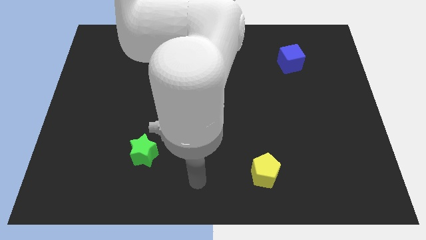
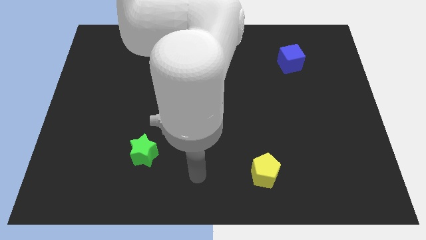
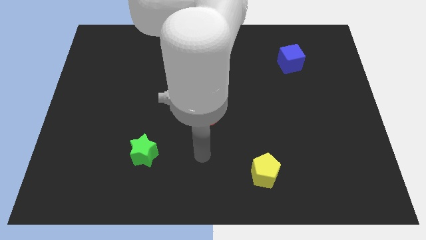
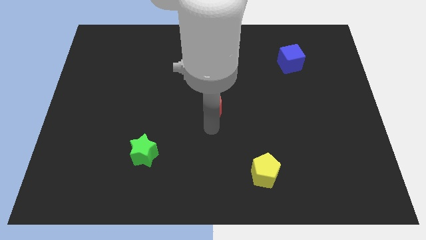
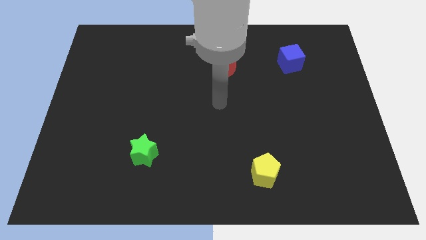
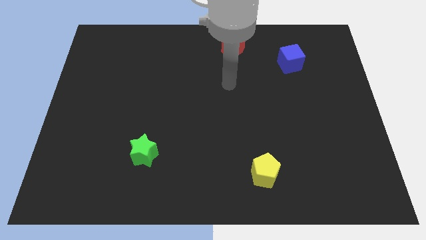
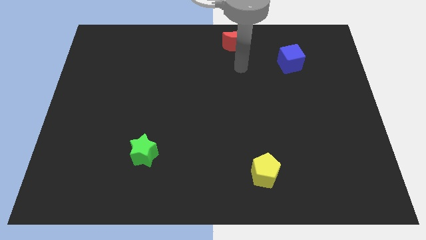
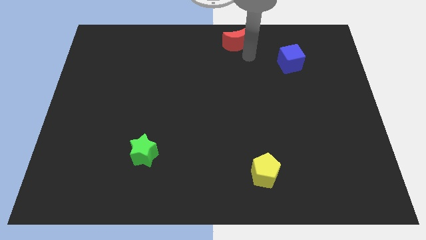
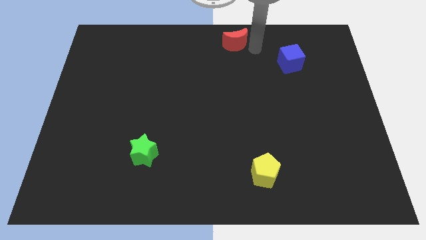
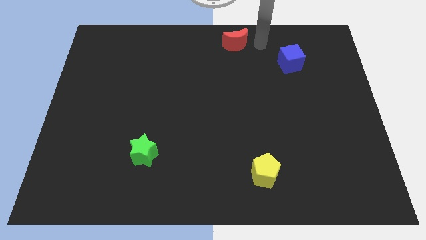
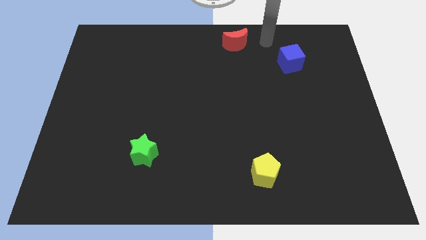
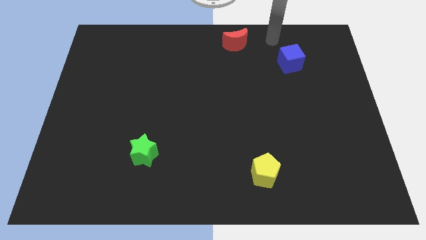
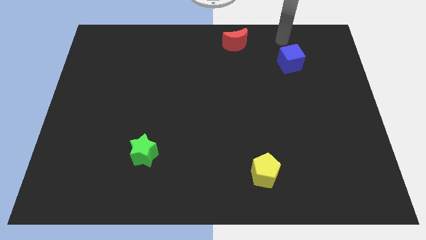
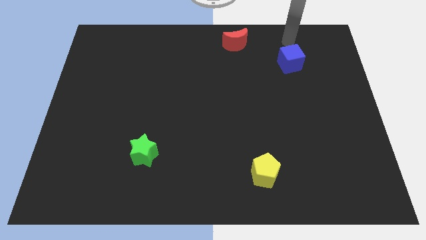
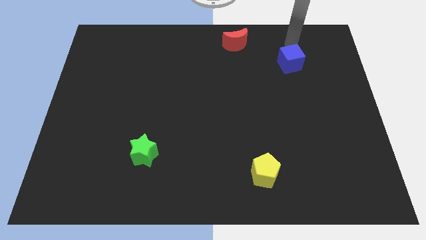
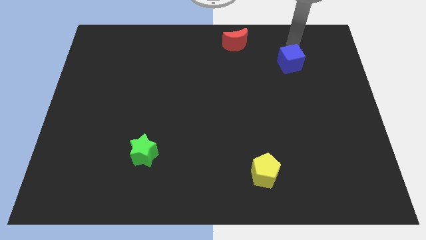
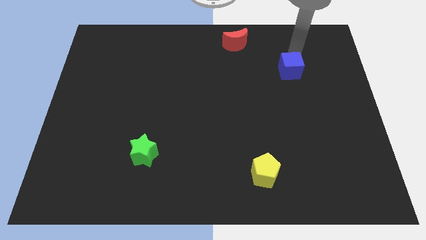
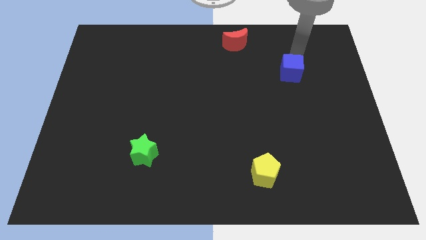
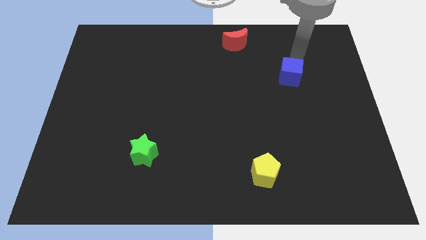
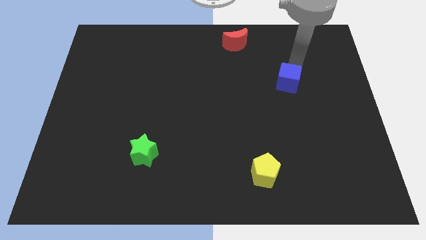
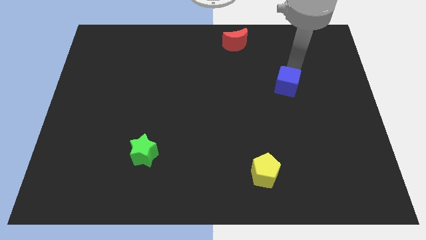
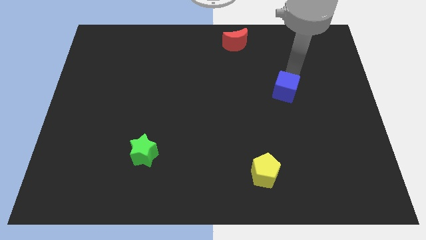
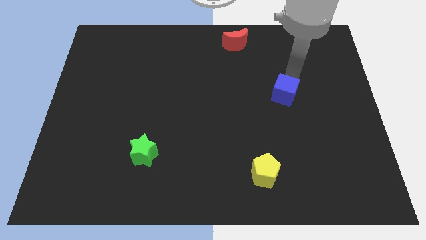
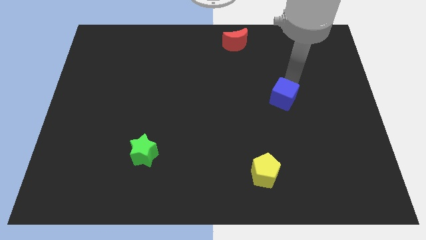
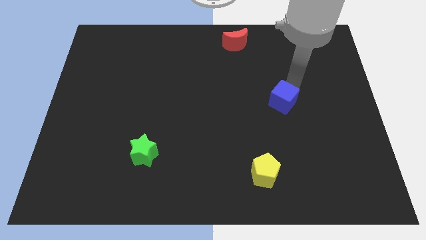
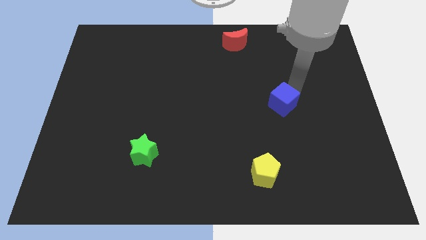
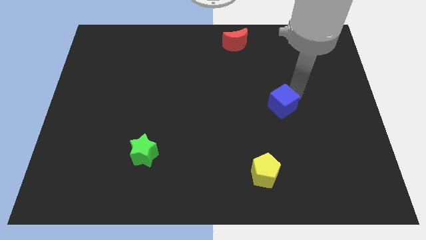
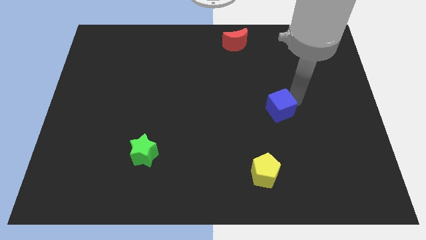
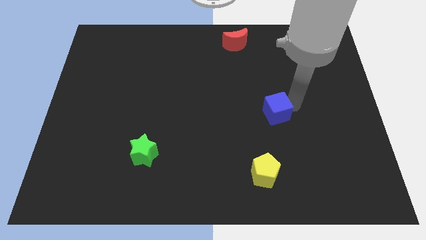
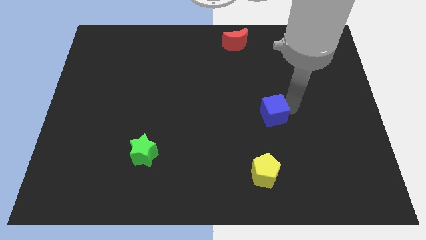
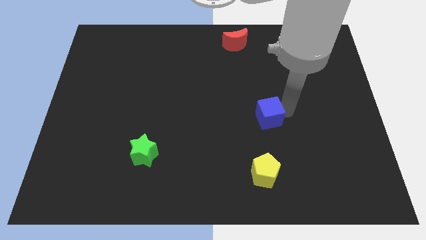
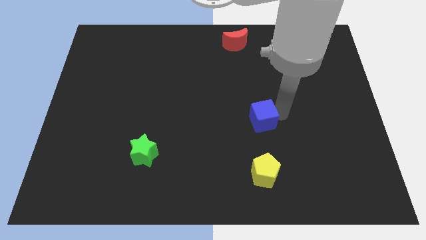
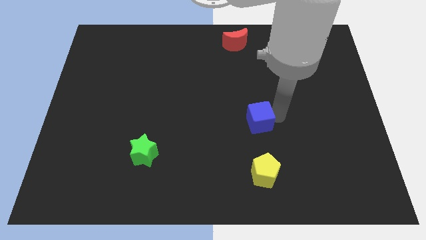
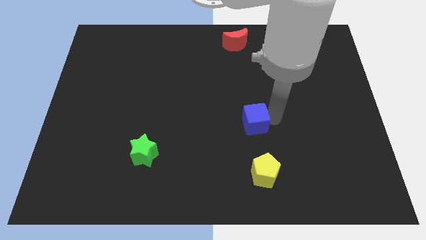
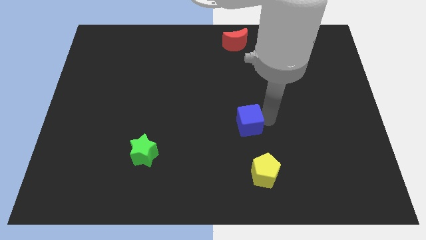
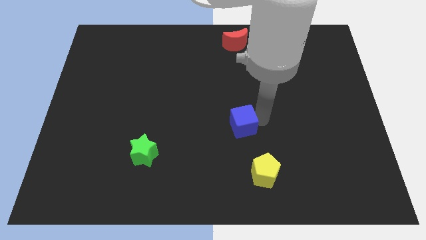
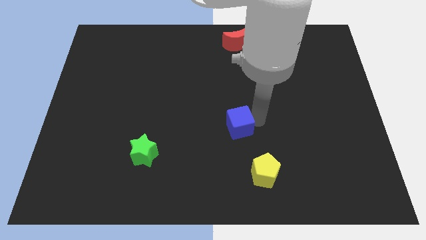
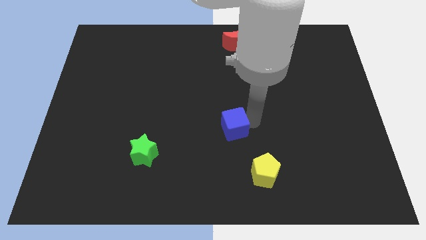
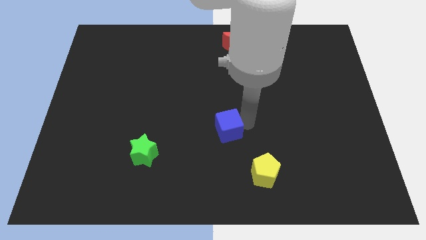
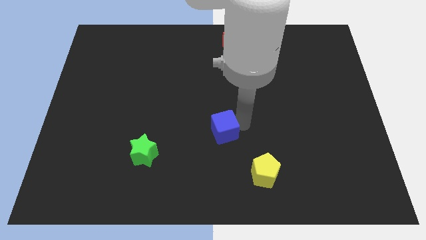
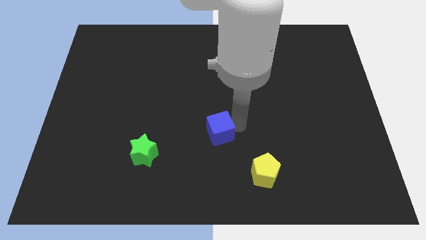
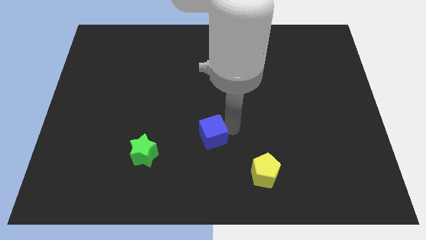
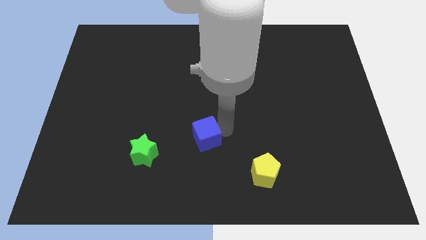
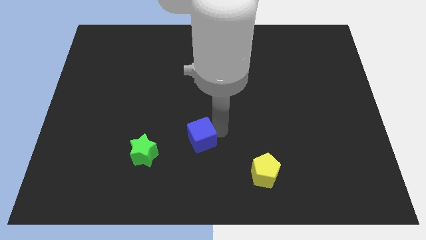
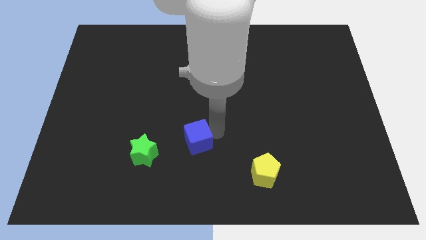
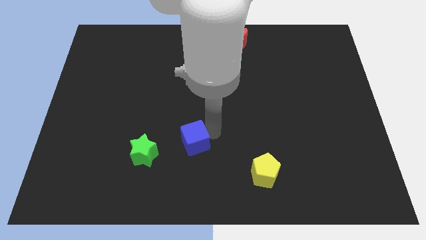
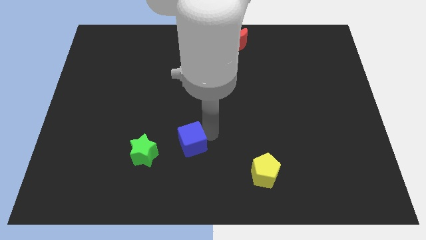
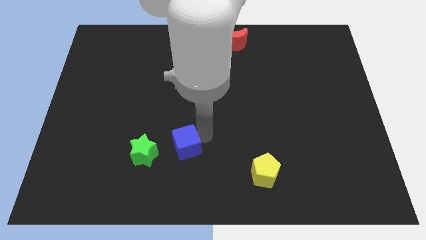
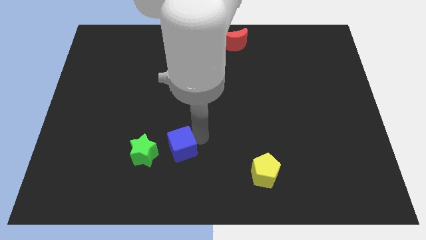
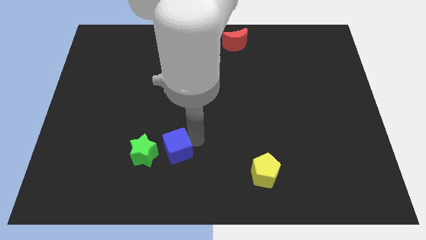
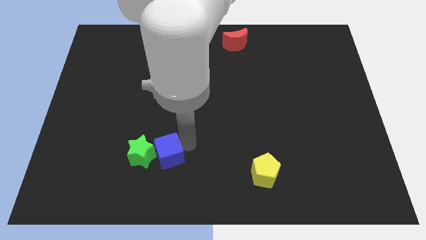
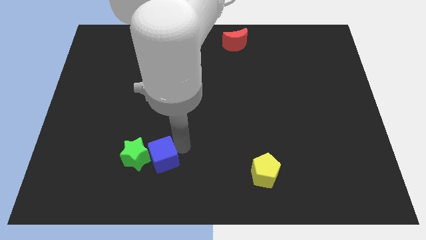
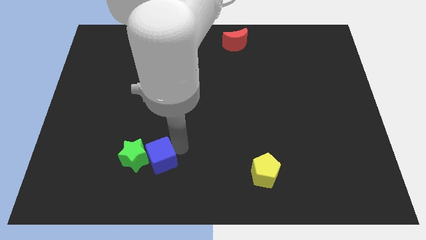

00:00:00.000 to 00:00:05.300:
put the blue block close to the star

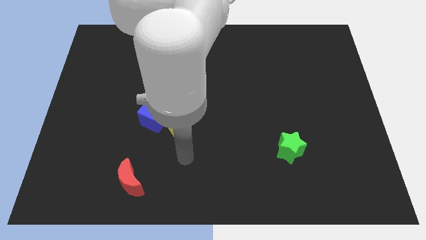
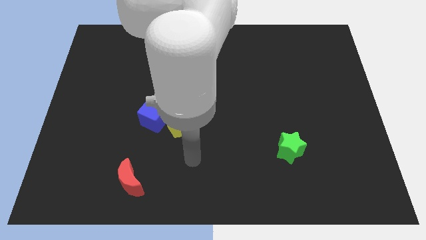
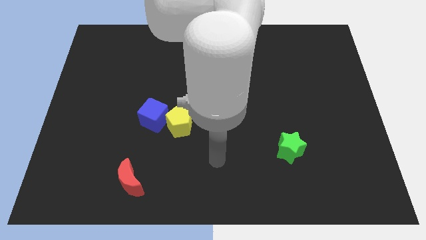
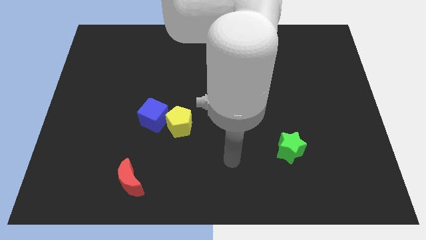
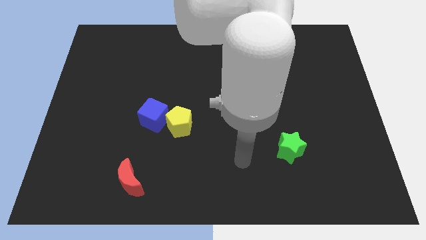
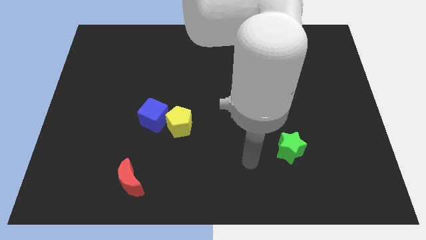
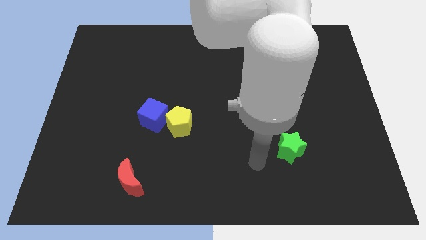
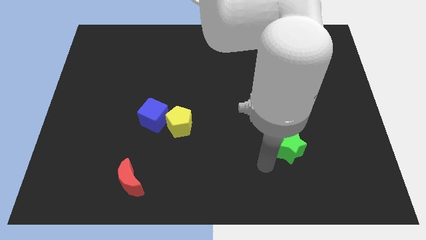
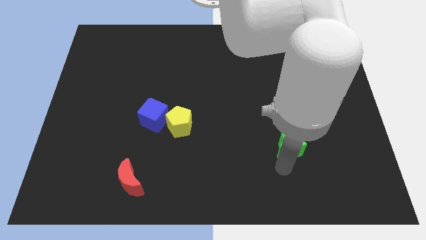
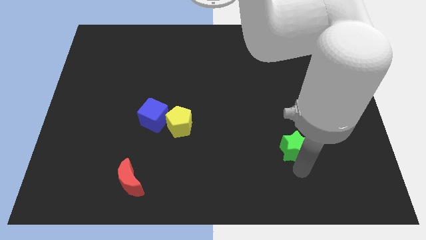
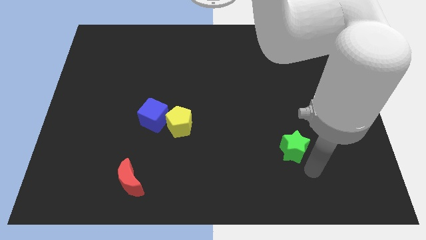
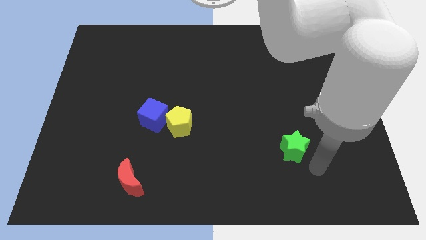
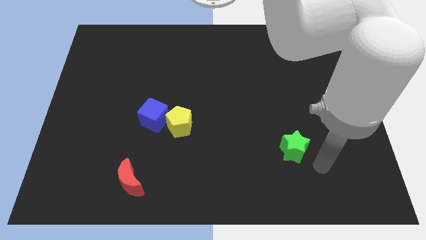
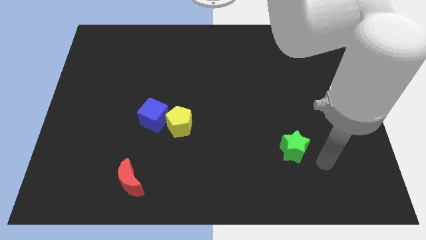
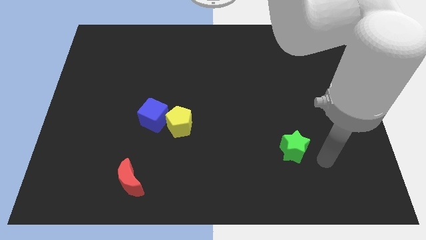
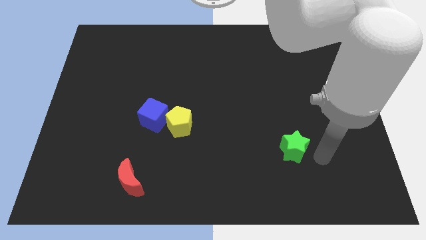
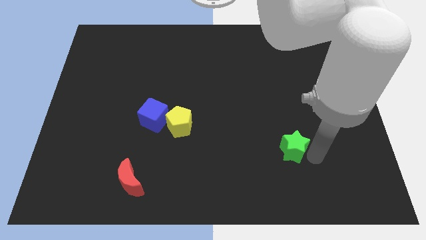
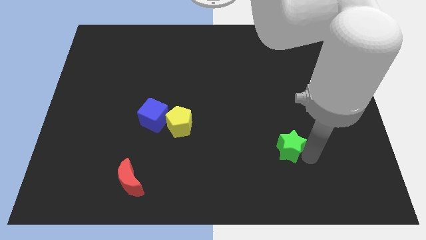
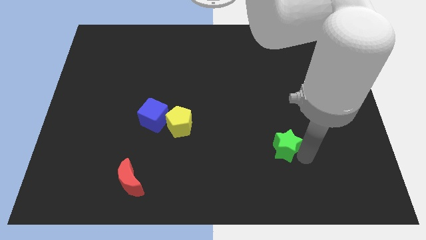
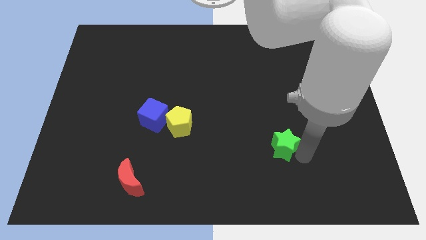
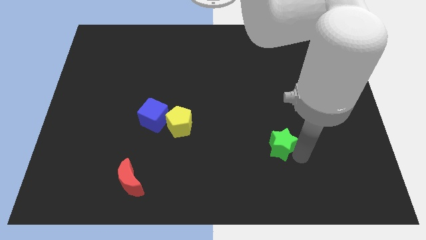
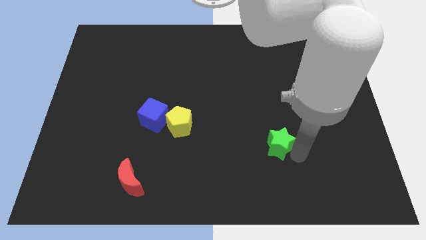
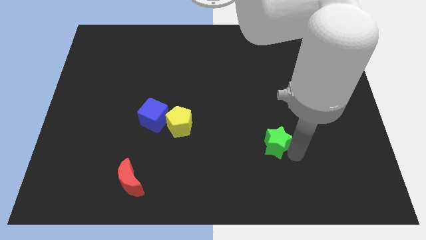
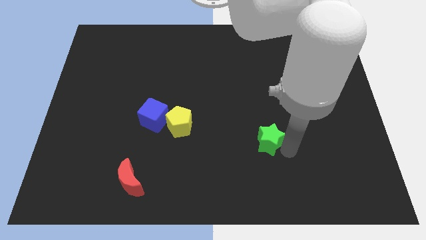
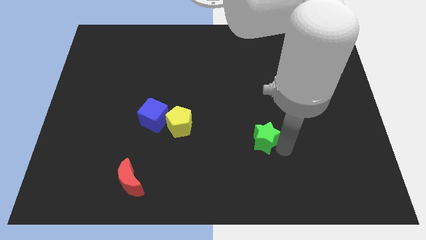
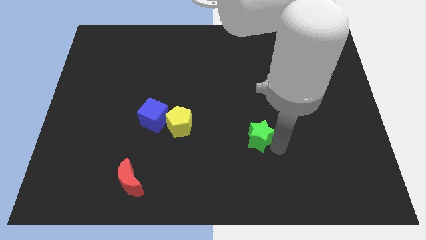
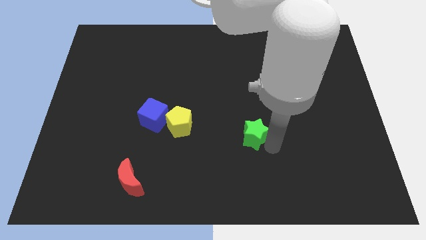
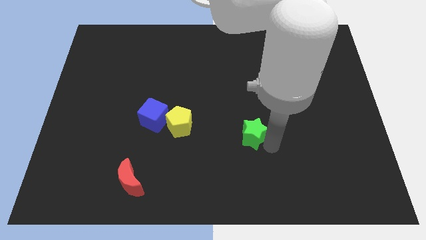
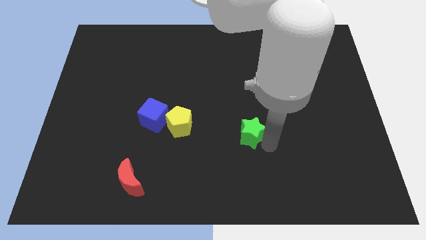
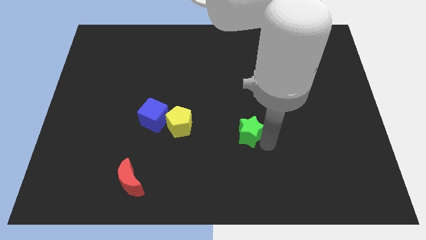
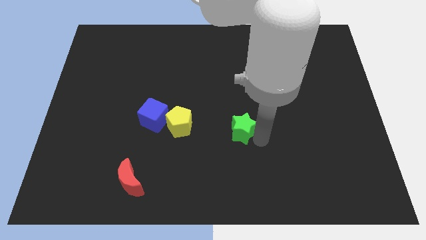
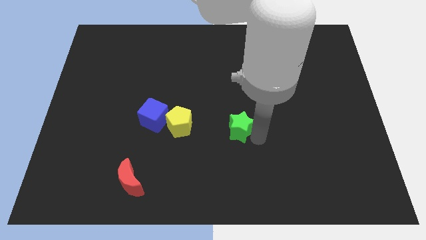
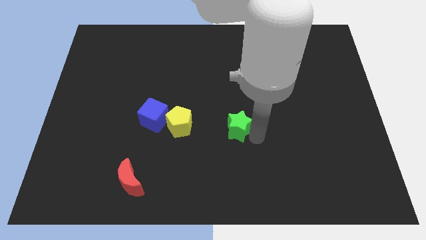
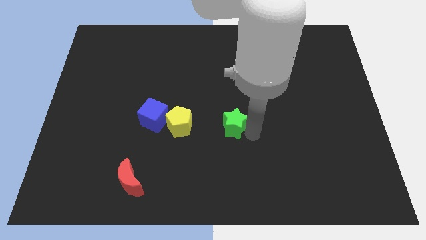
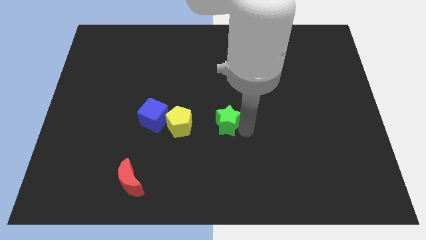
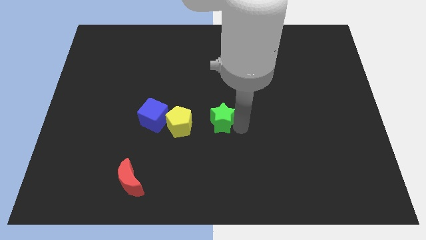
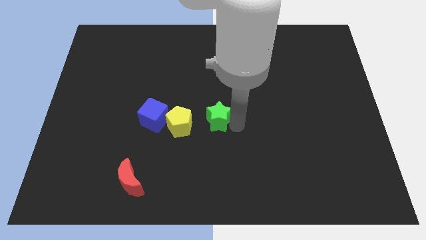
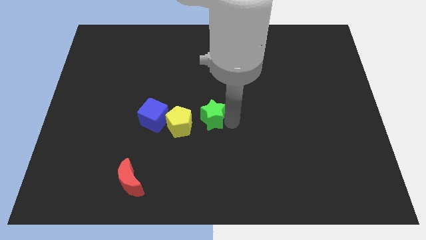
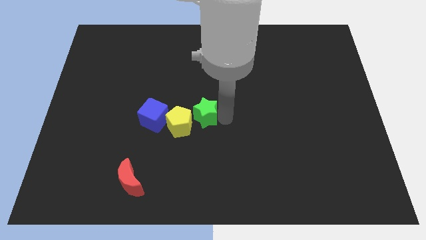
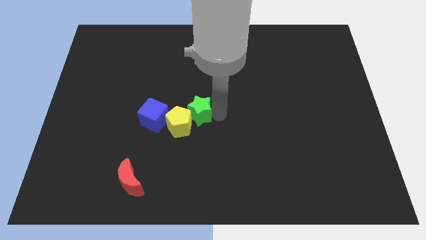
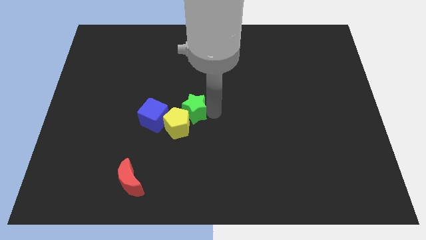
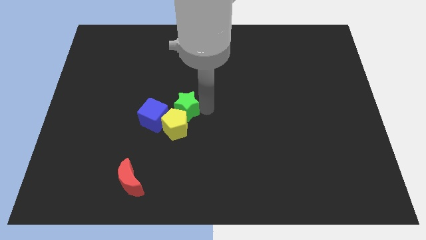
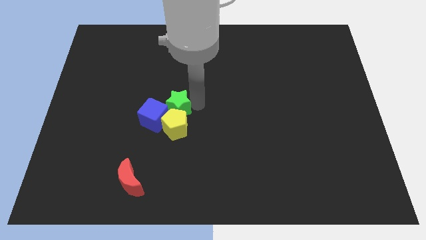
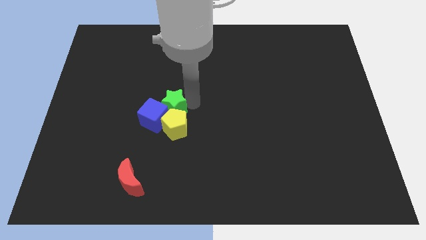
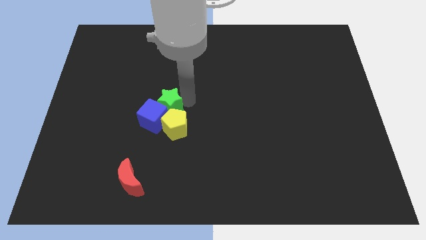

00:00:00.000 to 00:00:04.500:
put the green star towards the blue cube
